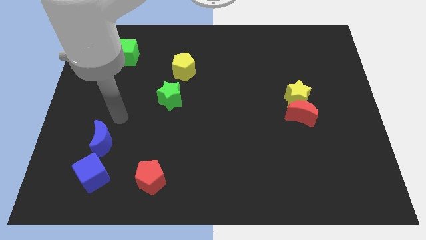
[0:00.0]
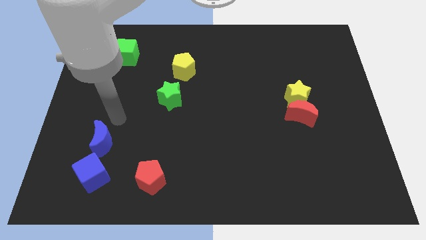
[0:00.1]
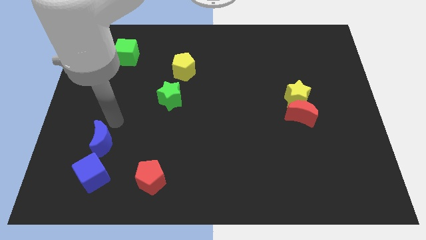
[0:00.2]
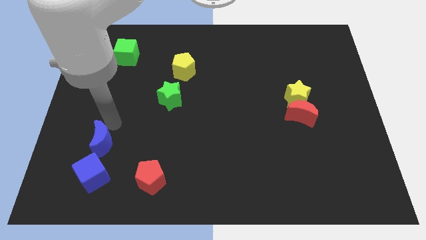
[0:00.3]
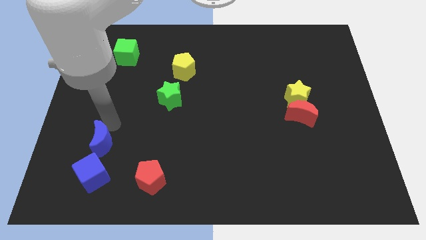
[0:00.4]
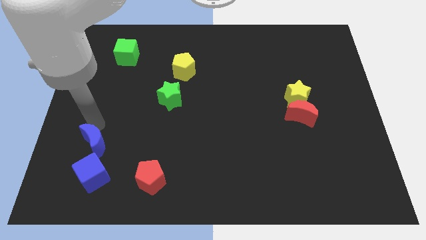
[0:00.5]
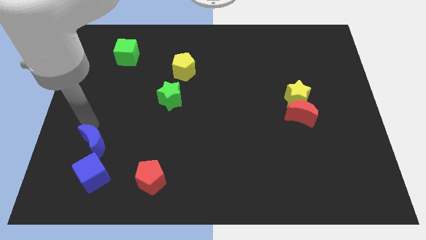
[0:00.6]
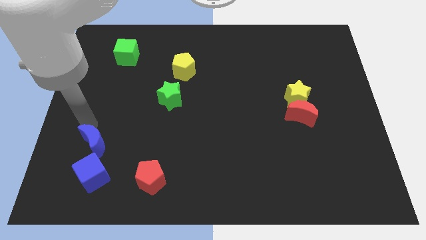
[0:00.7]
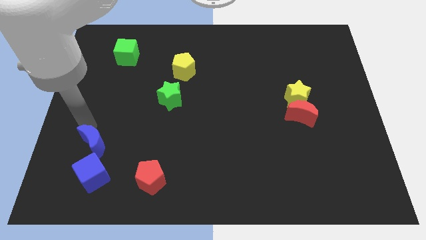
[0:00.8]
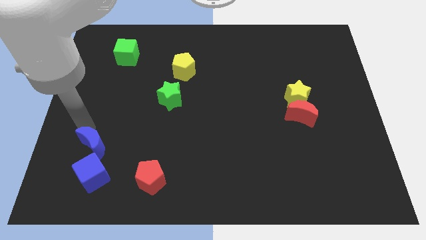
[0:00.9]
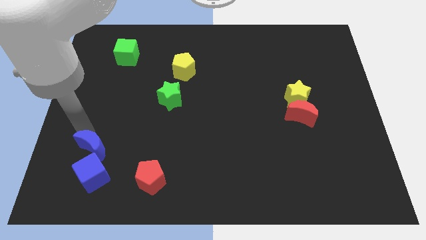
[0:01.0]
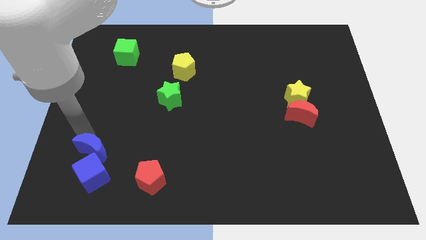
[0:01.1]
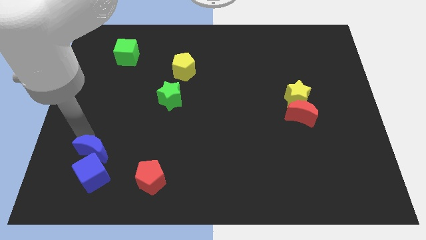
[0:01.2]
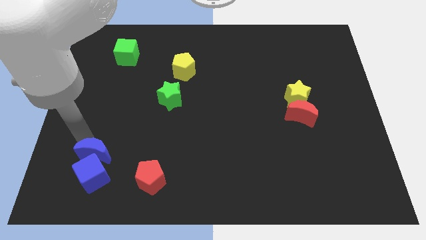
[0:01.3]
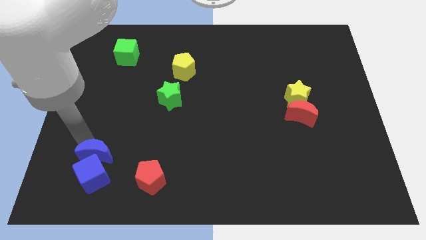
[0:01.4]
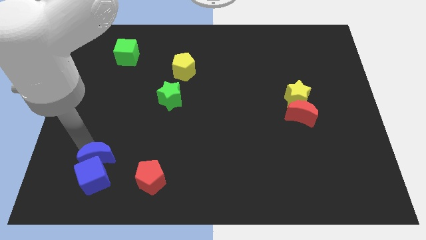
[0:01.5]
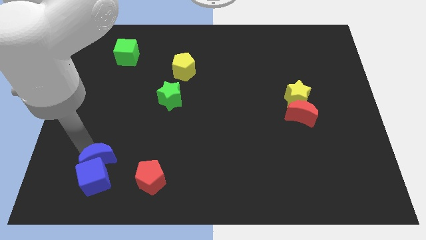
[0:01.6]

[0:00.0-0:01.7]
drag blue moon into the blue cube

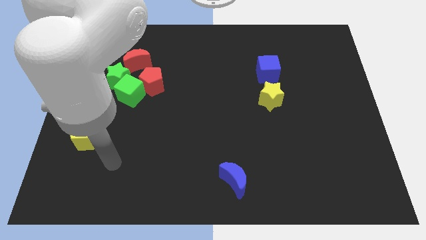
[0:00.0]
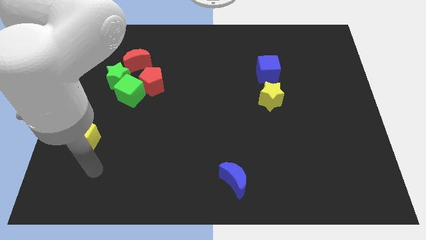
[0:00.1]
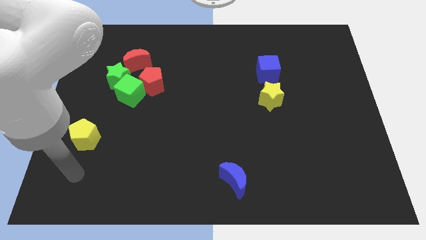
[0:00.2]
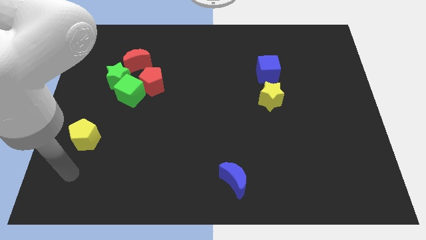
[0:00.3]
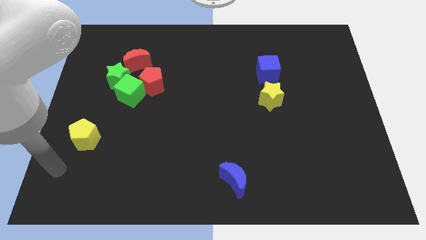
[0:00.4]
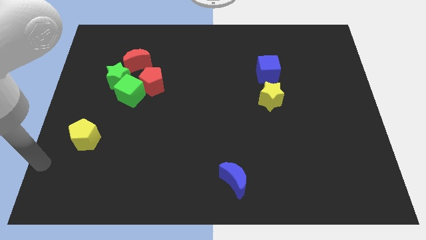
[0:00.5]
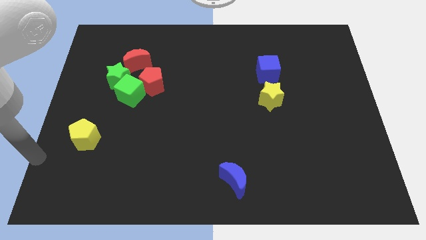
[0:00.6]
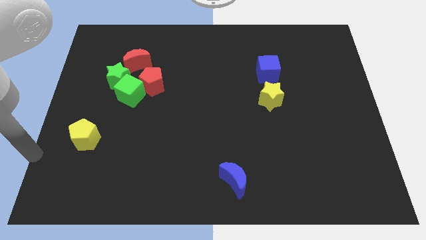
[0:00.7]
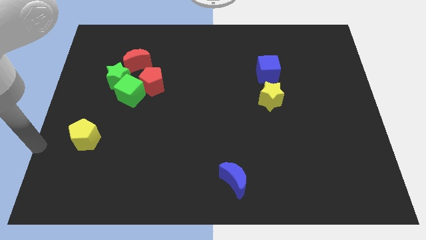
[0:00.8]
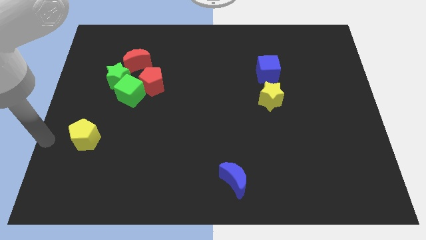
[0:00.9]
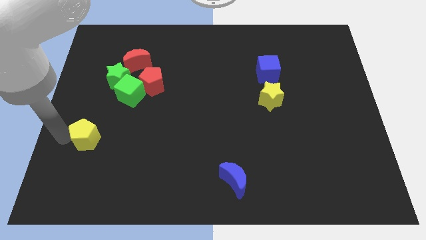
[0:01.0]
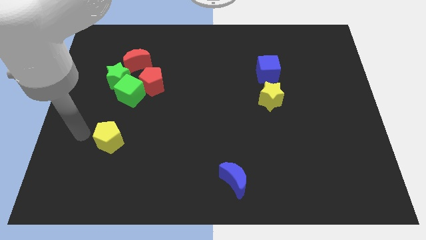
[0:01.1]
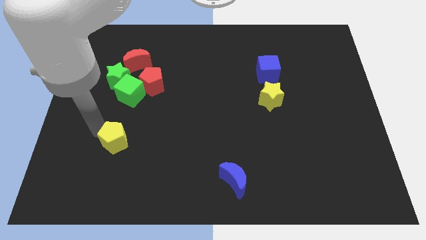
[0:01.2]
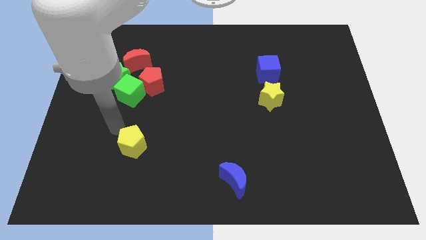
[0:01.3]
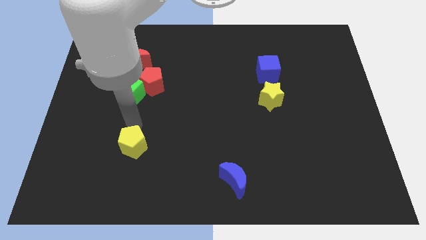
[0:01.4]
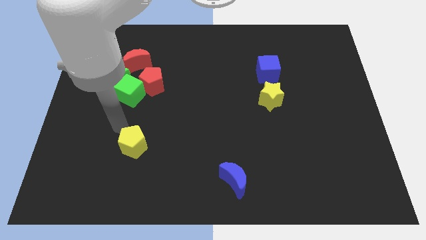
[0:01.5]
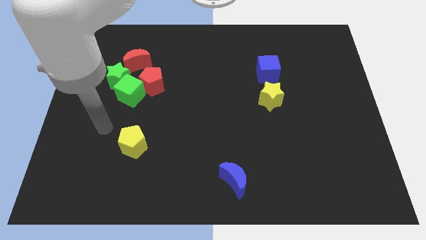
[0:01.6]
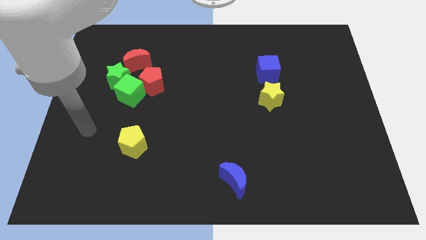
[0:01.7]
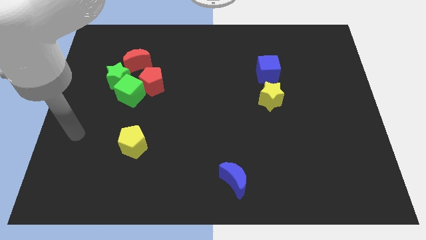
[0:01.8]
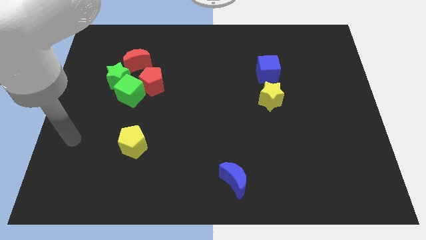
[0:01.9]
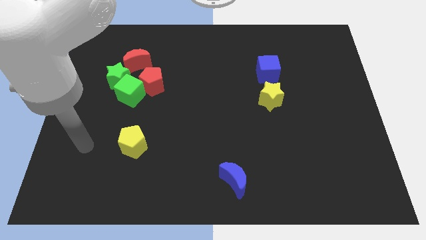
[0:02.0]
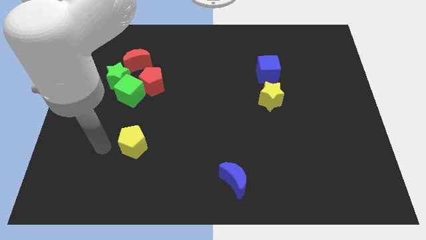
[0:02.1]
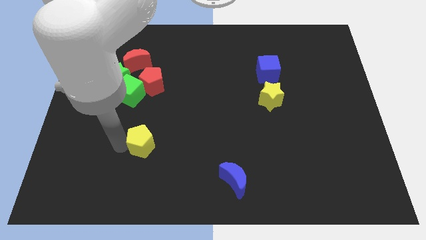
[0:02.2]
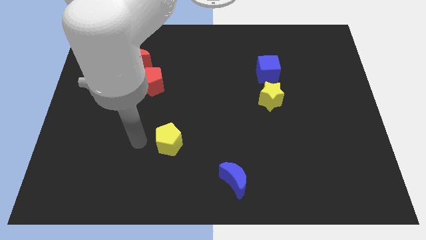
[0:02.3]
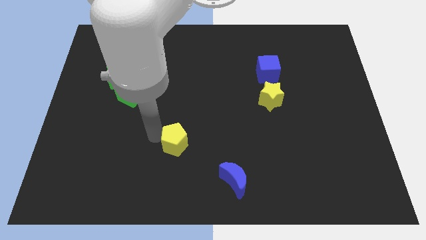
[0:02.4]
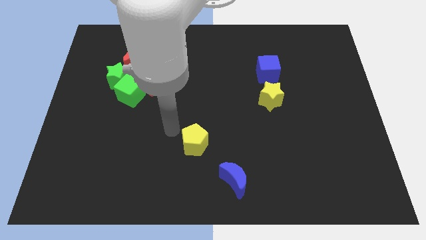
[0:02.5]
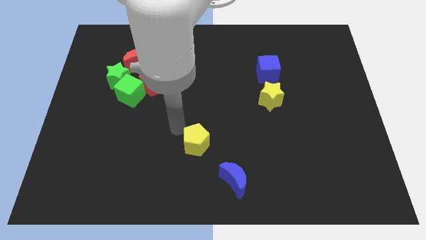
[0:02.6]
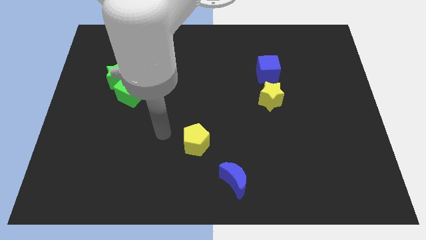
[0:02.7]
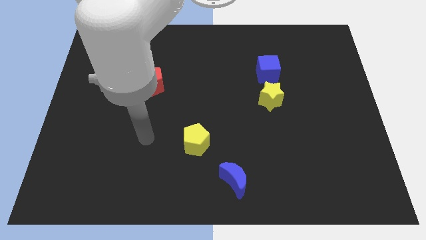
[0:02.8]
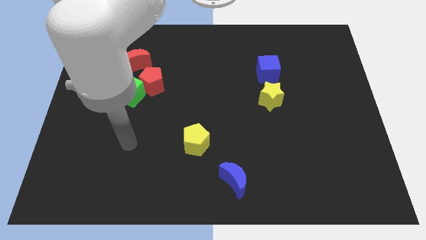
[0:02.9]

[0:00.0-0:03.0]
drag the yellow pentagon between the blue moon and red pentagon

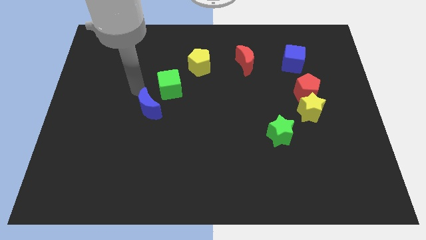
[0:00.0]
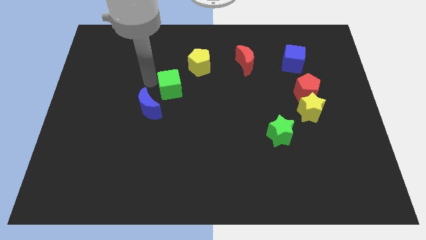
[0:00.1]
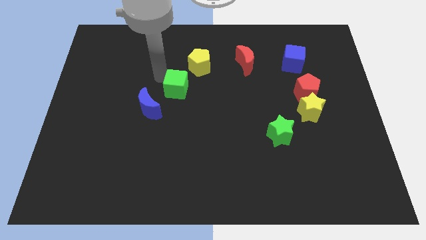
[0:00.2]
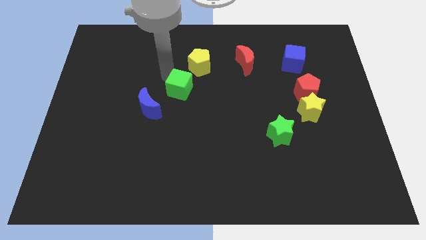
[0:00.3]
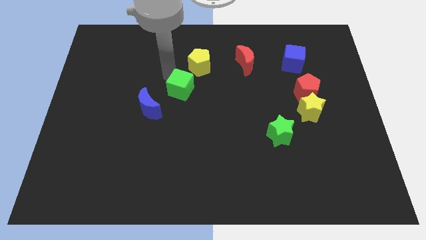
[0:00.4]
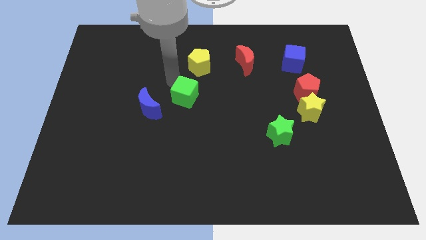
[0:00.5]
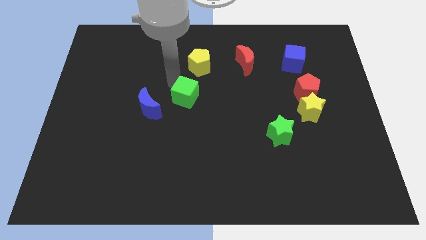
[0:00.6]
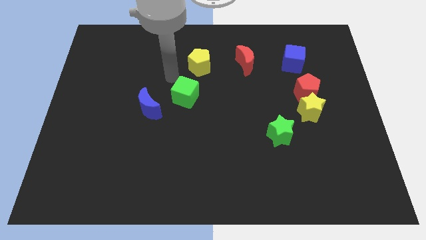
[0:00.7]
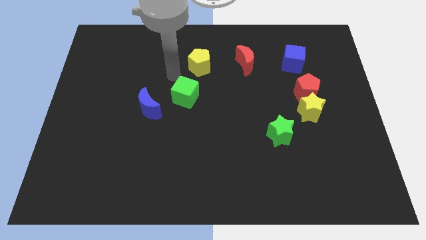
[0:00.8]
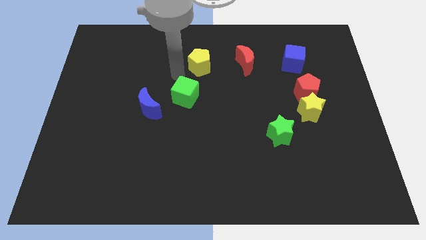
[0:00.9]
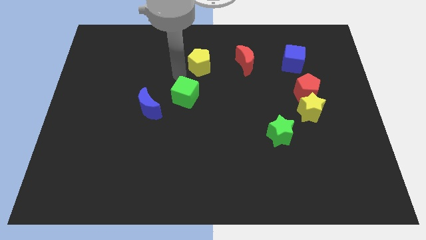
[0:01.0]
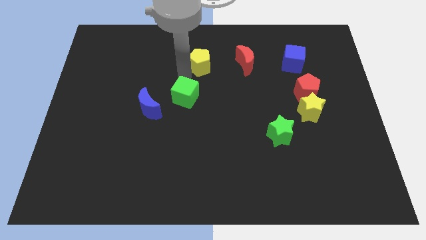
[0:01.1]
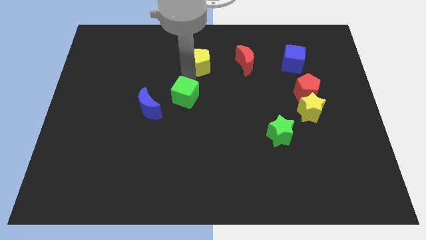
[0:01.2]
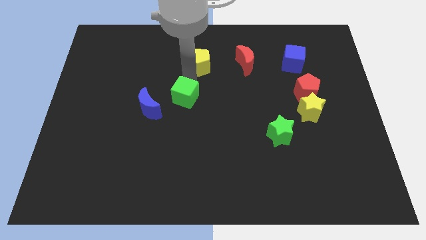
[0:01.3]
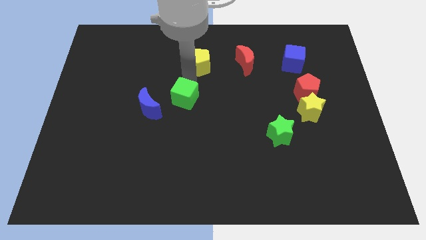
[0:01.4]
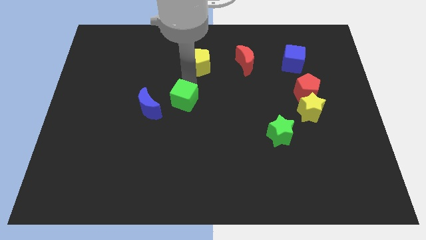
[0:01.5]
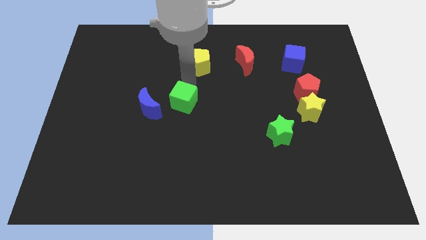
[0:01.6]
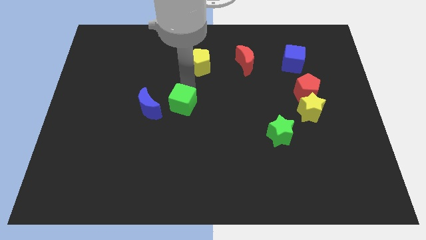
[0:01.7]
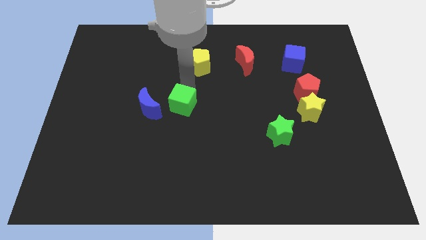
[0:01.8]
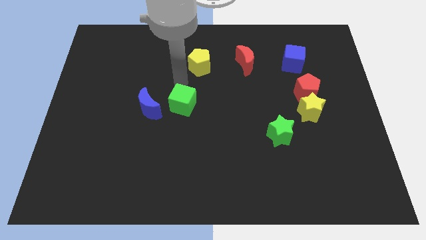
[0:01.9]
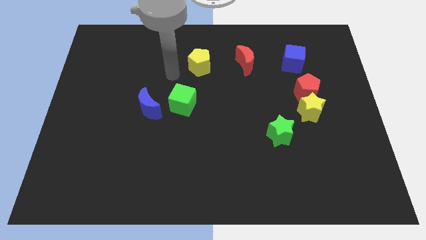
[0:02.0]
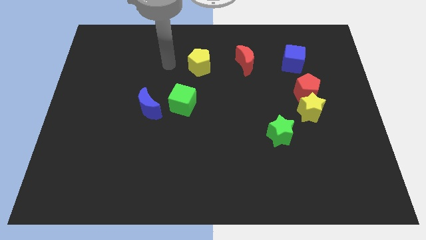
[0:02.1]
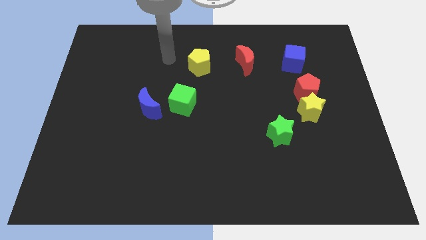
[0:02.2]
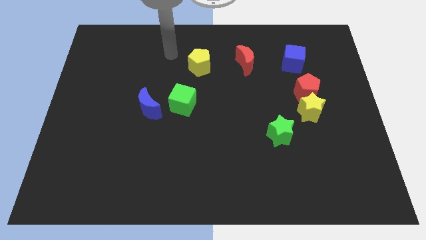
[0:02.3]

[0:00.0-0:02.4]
place the green cube right to the blue moon

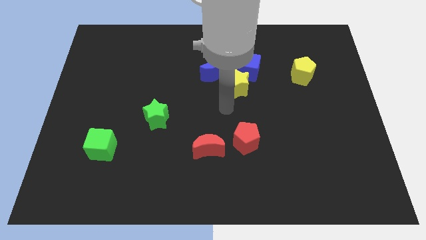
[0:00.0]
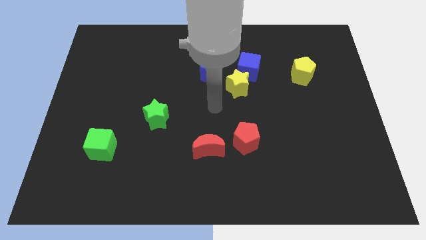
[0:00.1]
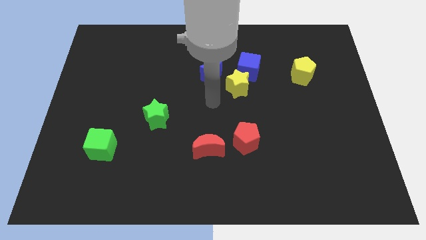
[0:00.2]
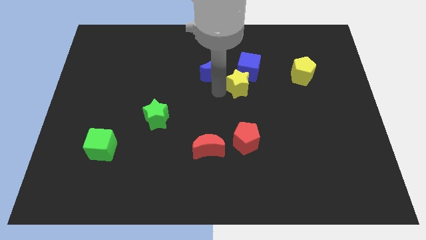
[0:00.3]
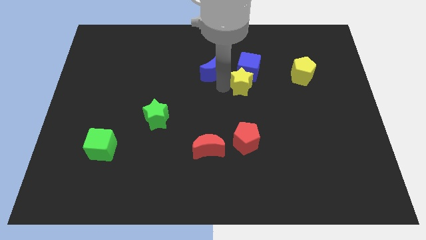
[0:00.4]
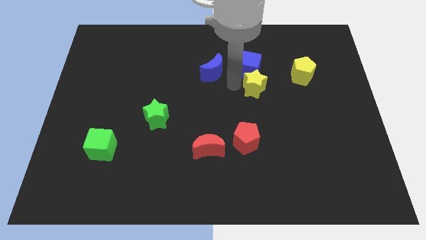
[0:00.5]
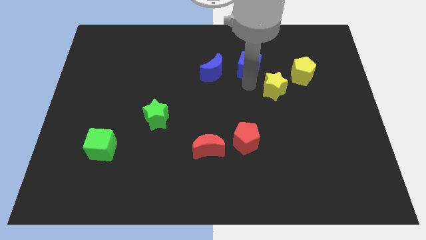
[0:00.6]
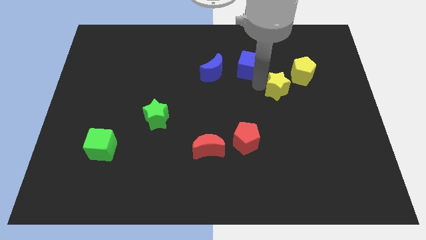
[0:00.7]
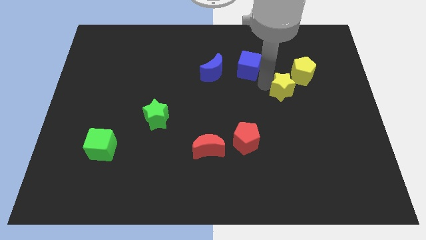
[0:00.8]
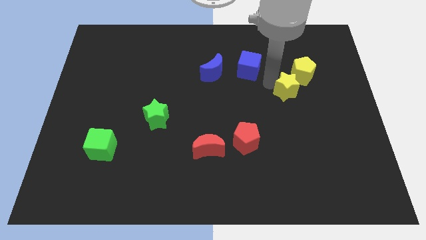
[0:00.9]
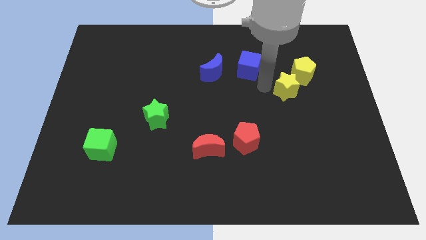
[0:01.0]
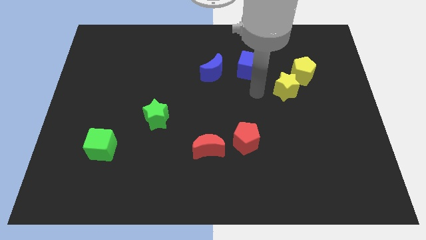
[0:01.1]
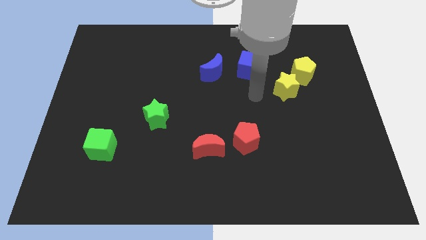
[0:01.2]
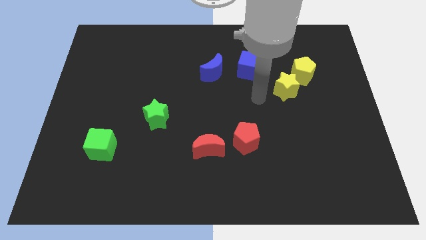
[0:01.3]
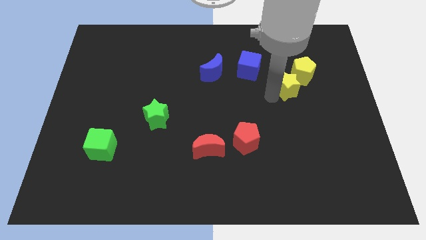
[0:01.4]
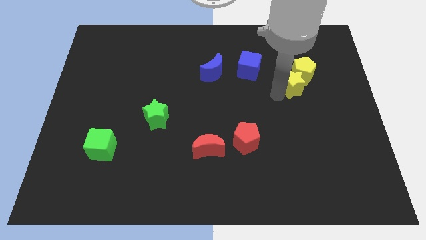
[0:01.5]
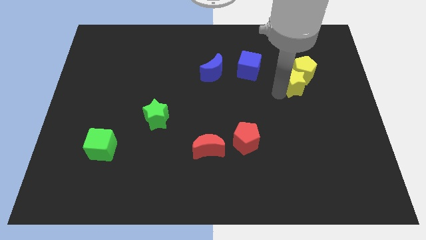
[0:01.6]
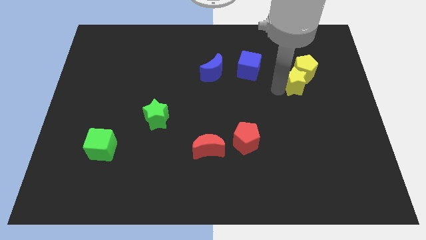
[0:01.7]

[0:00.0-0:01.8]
separate yellow star from the blue cube

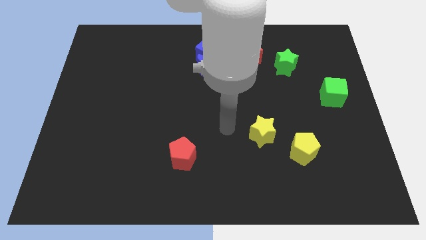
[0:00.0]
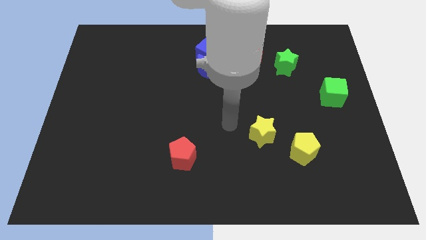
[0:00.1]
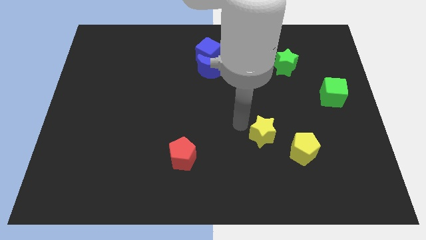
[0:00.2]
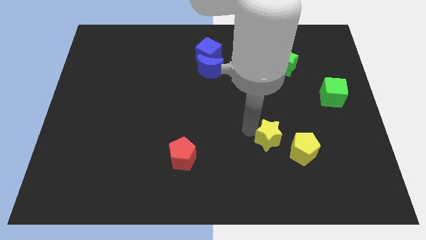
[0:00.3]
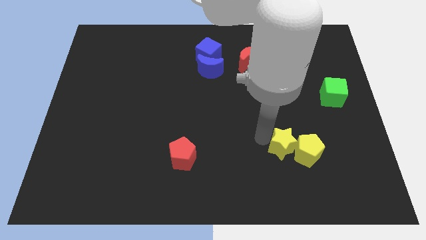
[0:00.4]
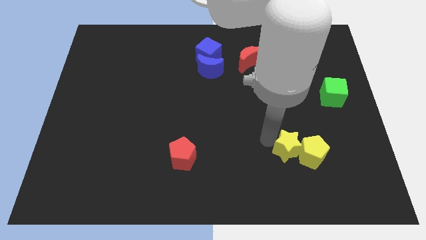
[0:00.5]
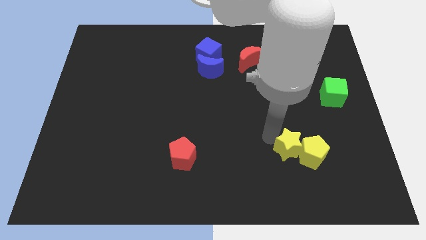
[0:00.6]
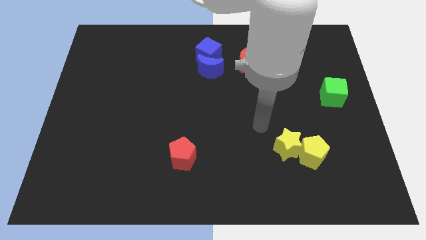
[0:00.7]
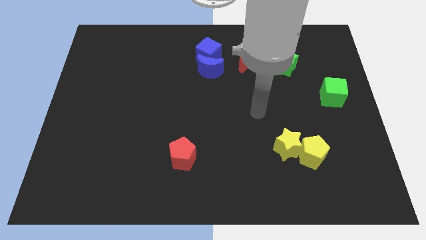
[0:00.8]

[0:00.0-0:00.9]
move the yellow star into the yellow pentagon
